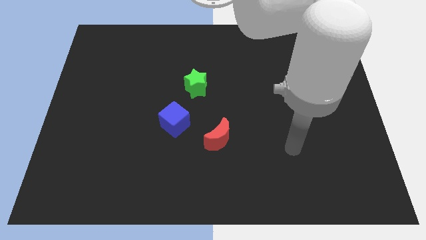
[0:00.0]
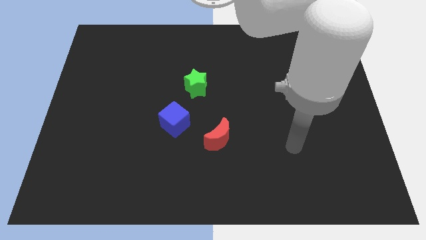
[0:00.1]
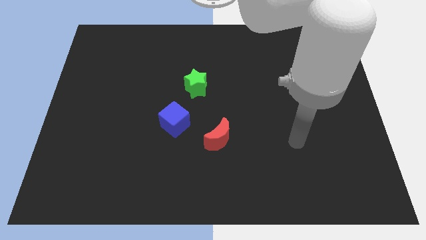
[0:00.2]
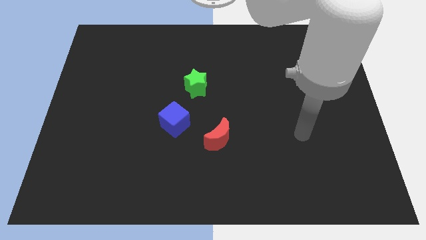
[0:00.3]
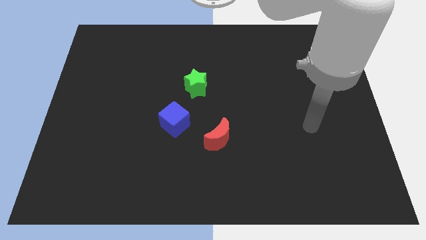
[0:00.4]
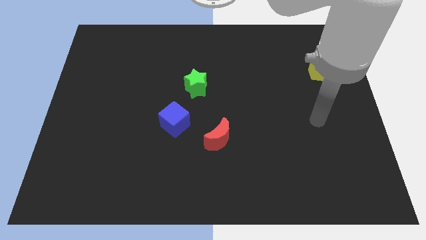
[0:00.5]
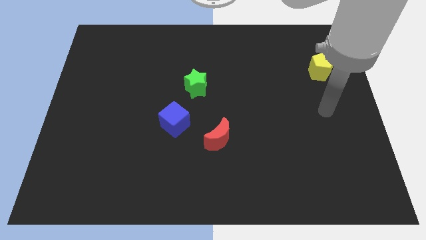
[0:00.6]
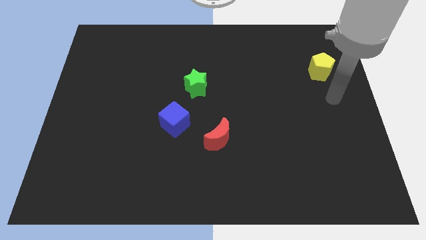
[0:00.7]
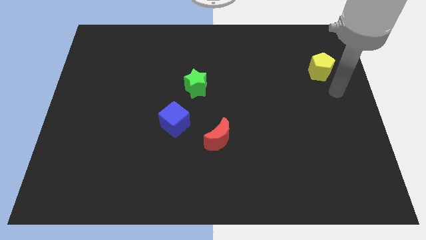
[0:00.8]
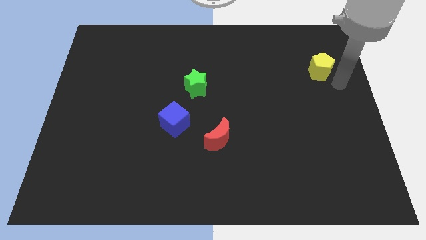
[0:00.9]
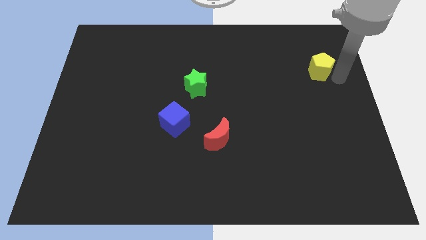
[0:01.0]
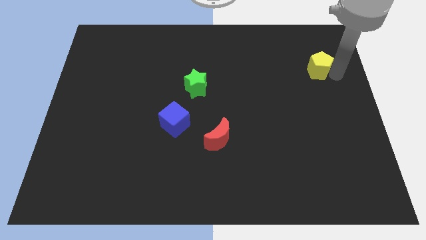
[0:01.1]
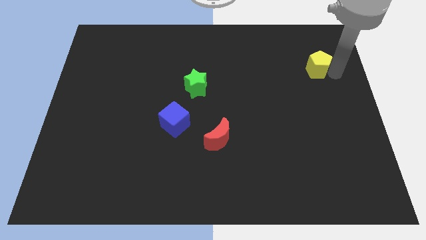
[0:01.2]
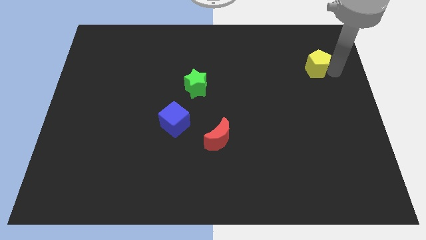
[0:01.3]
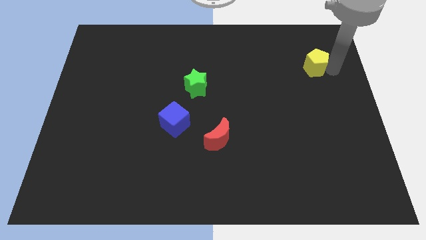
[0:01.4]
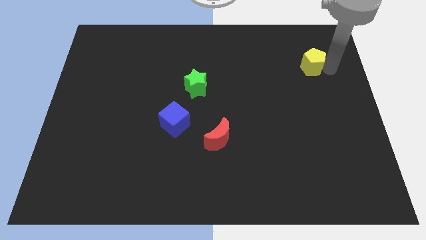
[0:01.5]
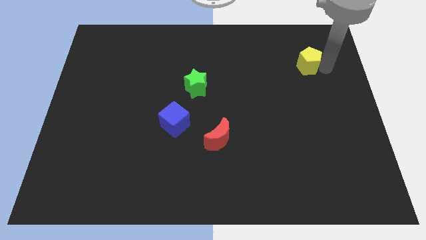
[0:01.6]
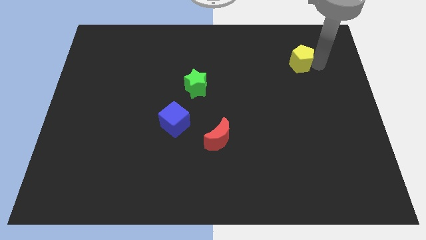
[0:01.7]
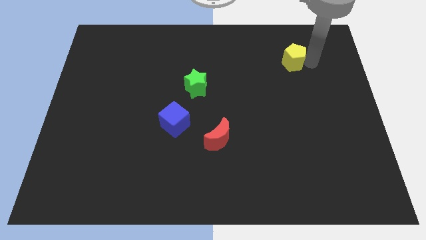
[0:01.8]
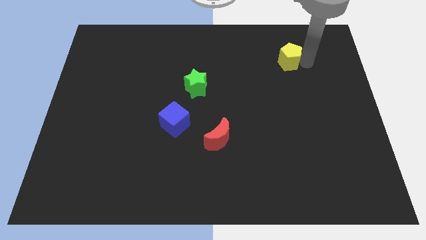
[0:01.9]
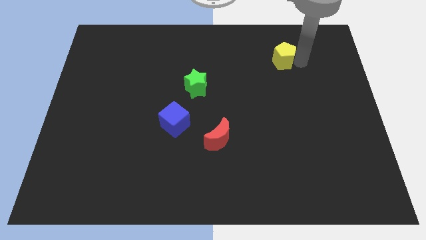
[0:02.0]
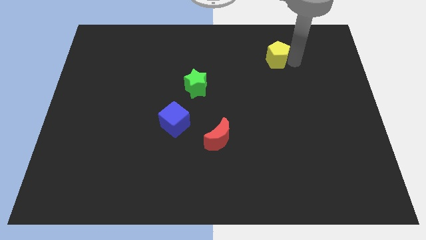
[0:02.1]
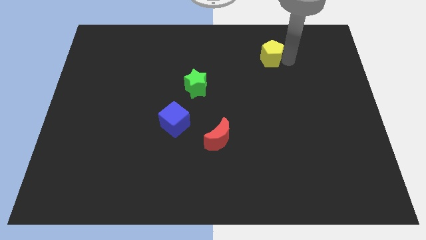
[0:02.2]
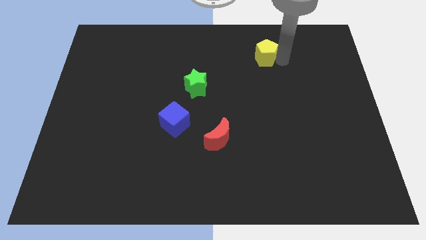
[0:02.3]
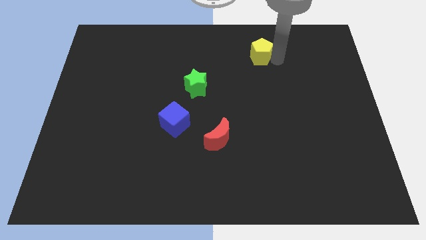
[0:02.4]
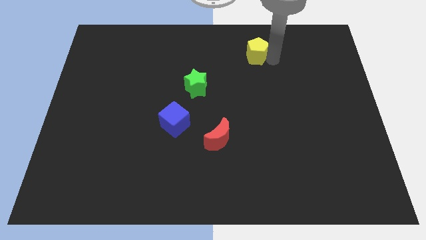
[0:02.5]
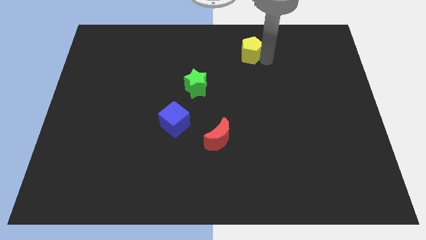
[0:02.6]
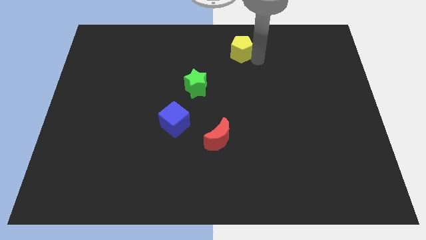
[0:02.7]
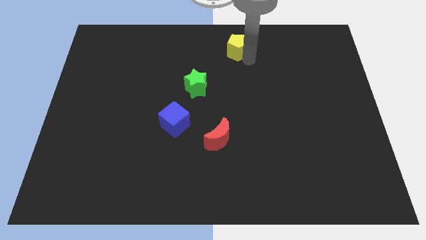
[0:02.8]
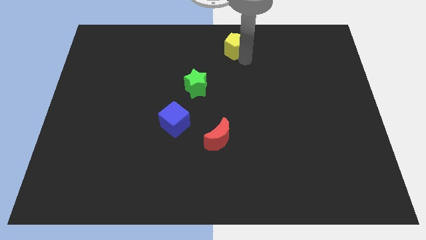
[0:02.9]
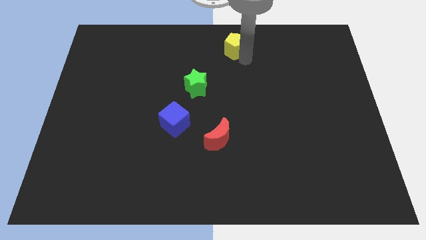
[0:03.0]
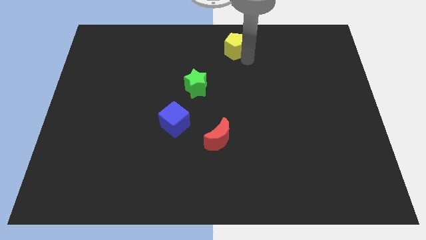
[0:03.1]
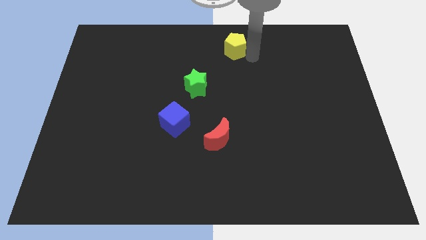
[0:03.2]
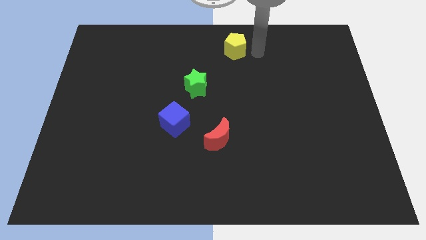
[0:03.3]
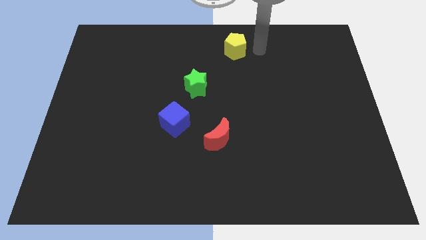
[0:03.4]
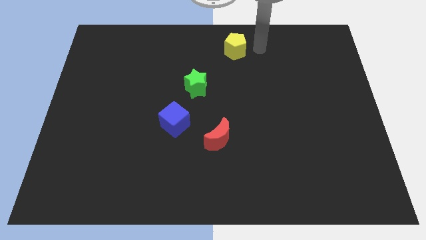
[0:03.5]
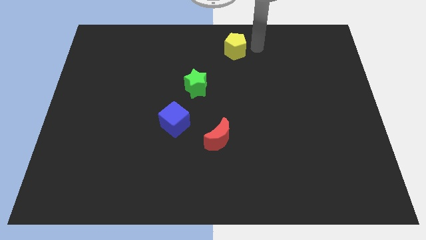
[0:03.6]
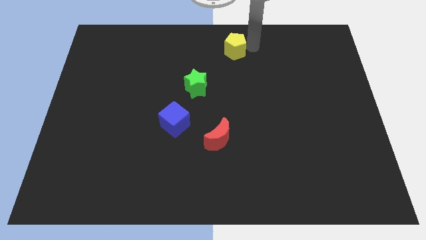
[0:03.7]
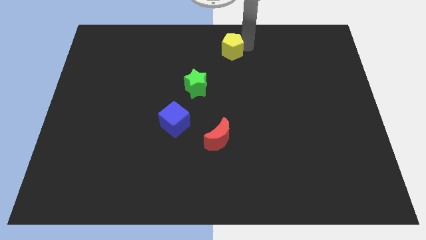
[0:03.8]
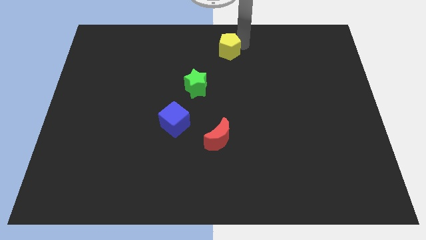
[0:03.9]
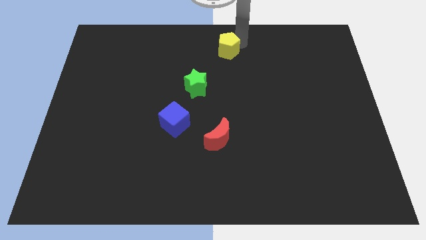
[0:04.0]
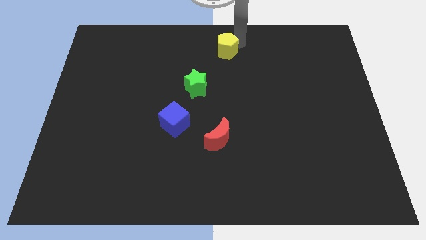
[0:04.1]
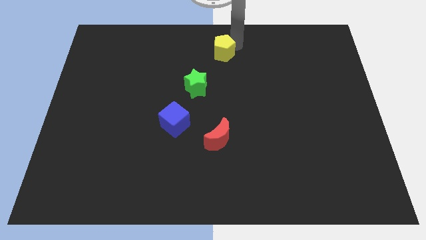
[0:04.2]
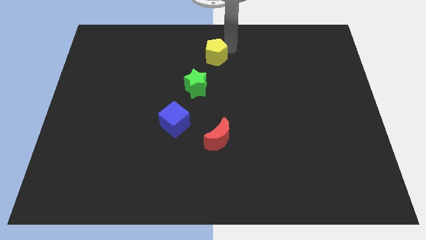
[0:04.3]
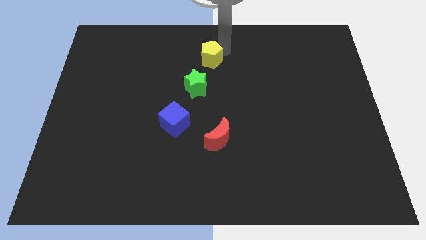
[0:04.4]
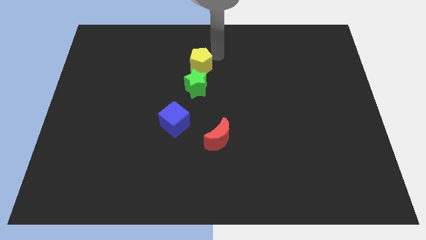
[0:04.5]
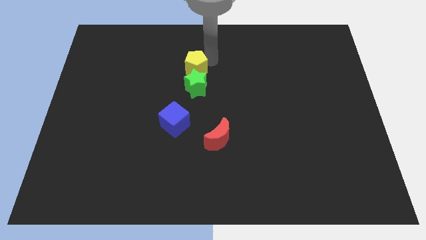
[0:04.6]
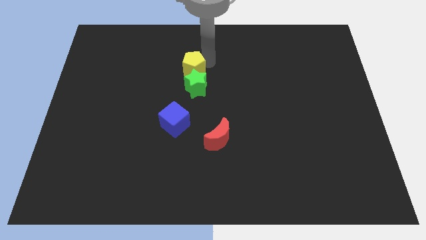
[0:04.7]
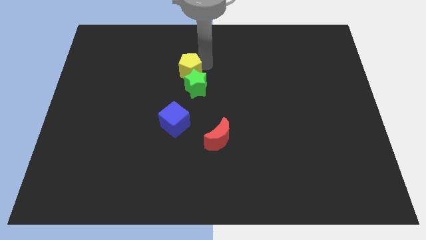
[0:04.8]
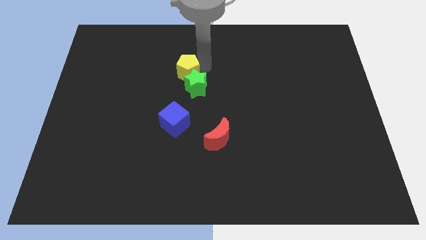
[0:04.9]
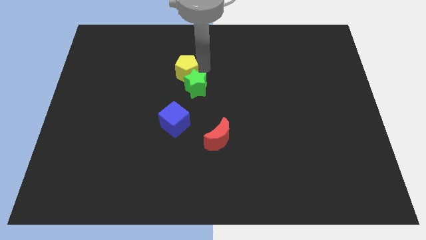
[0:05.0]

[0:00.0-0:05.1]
move the yellow block next to the green block

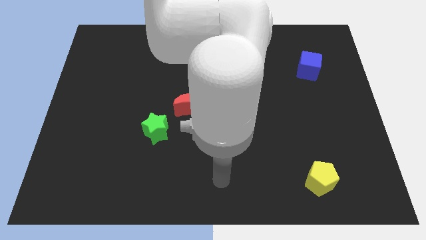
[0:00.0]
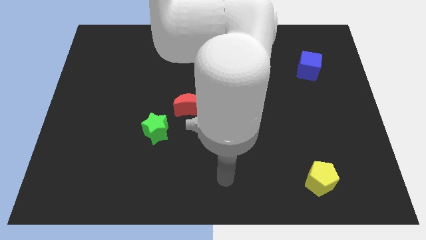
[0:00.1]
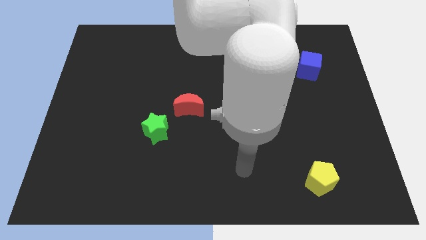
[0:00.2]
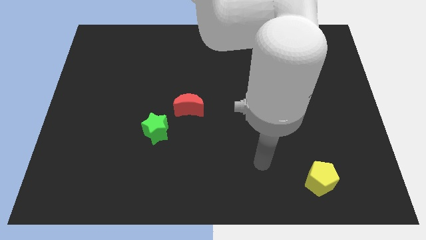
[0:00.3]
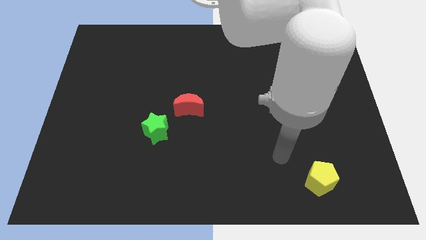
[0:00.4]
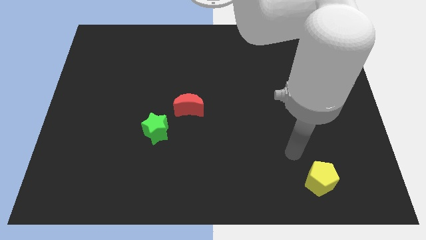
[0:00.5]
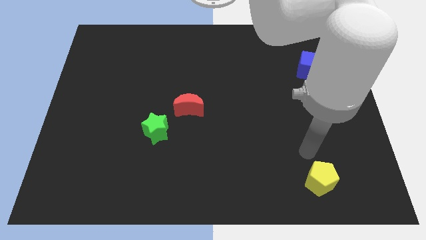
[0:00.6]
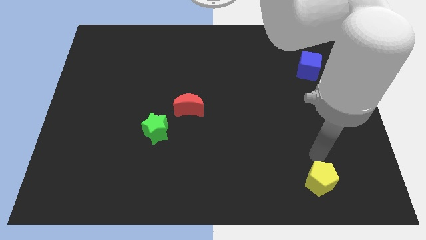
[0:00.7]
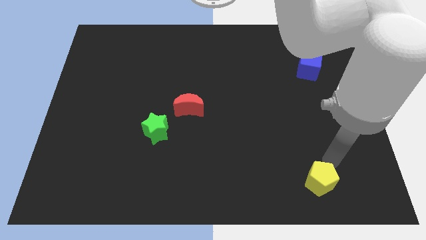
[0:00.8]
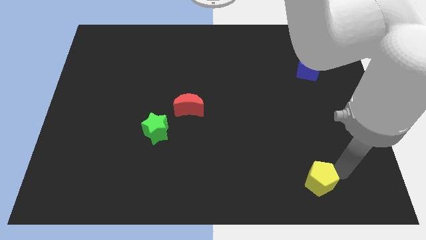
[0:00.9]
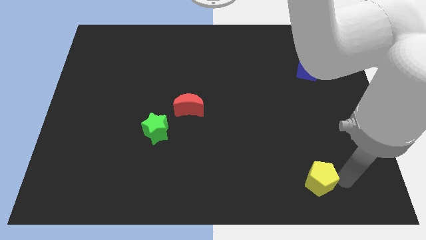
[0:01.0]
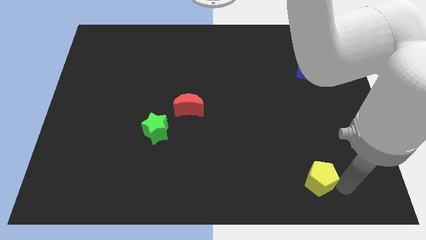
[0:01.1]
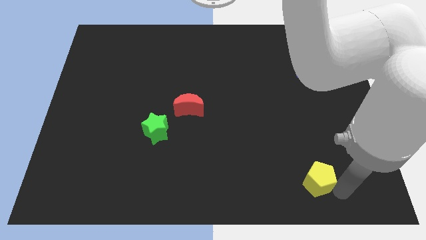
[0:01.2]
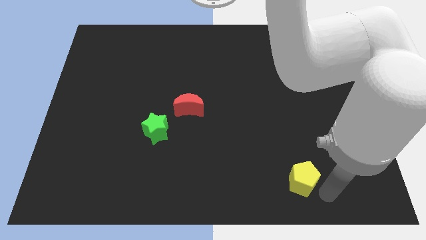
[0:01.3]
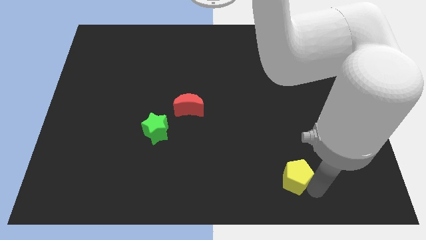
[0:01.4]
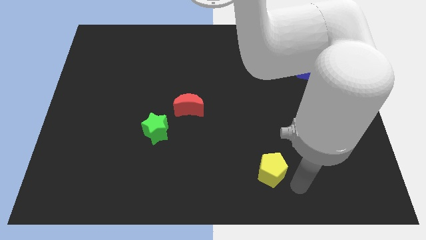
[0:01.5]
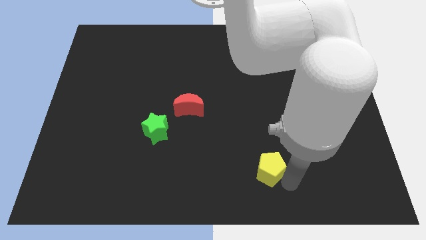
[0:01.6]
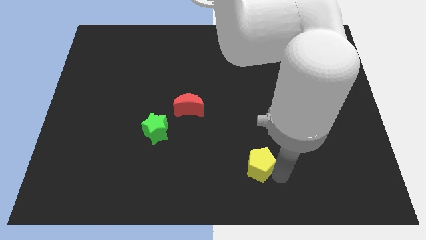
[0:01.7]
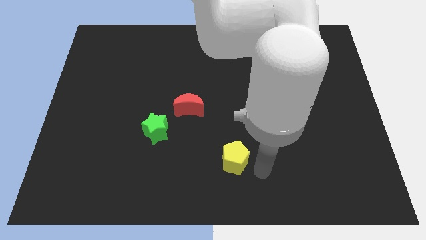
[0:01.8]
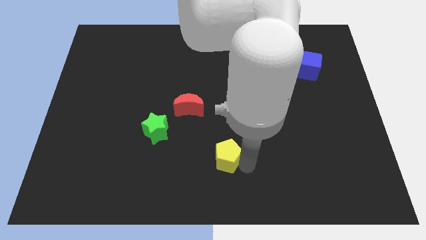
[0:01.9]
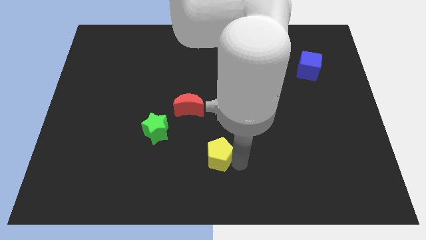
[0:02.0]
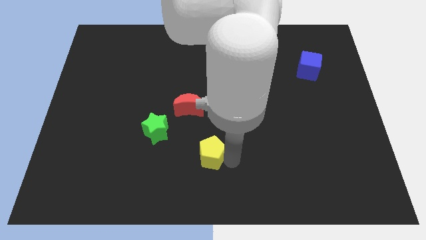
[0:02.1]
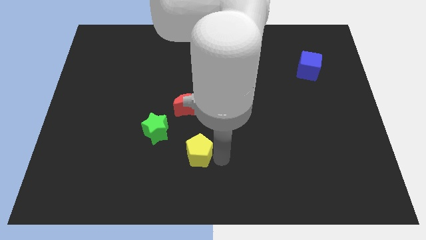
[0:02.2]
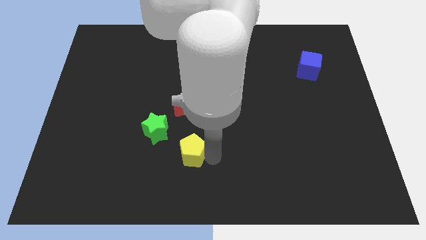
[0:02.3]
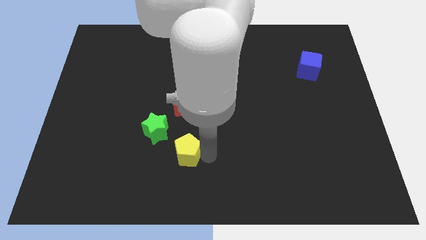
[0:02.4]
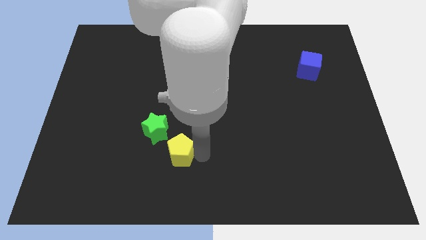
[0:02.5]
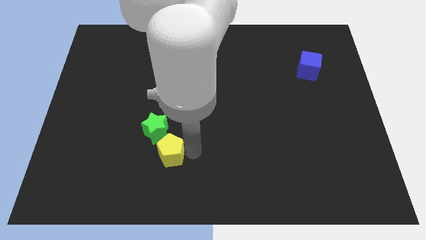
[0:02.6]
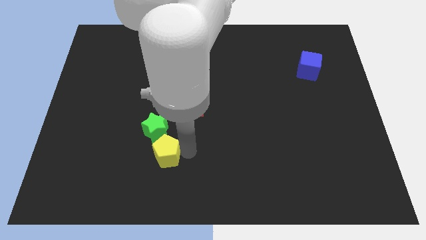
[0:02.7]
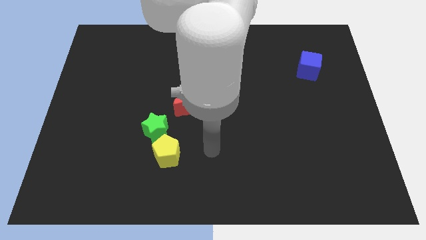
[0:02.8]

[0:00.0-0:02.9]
slide the yellow block to the green star

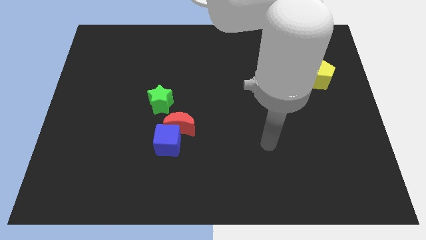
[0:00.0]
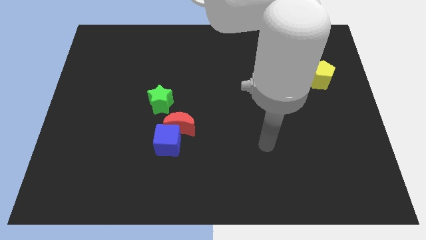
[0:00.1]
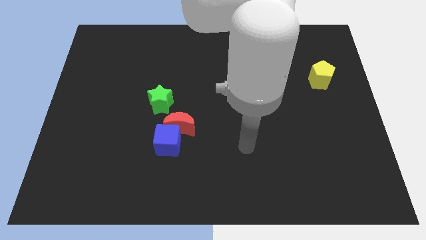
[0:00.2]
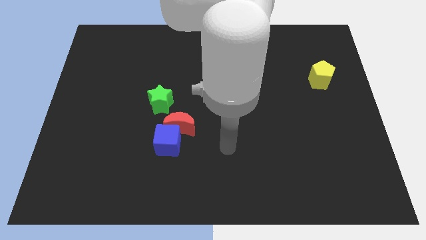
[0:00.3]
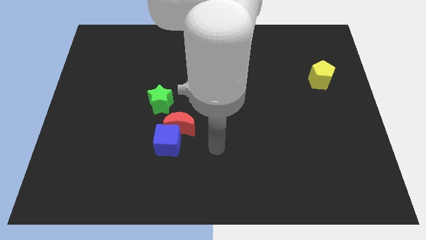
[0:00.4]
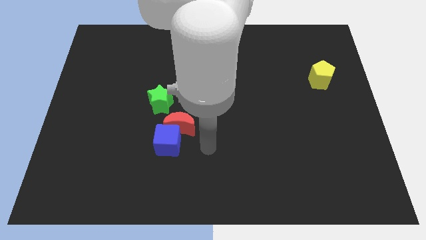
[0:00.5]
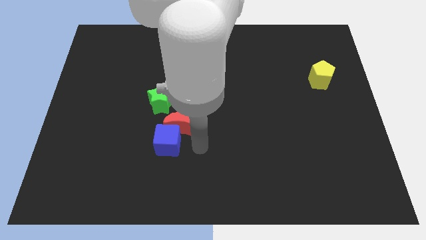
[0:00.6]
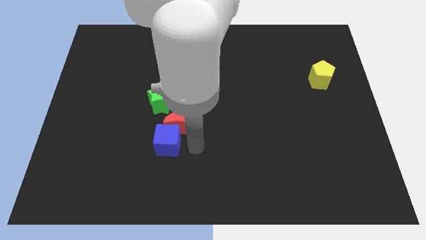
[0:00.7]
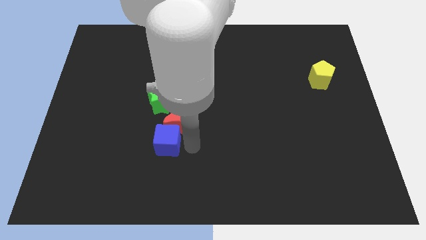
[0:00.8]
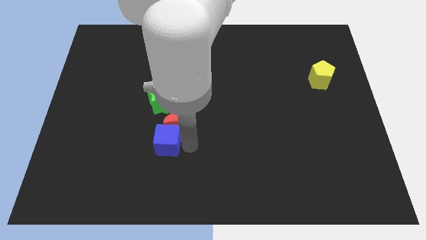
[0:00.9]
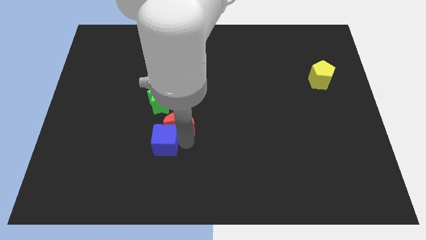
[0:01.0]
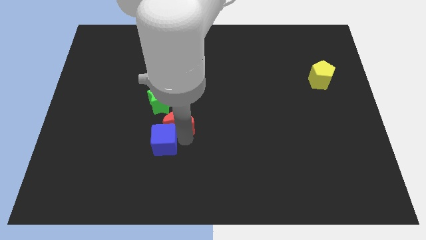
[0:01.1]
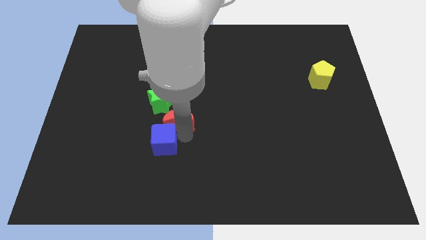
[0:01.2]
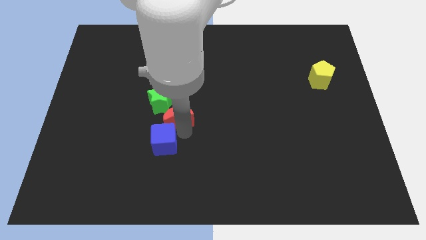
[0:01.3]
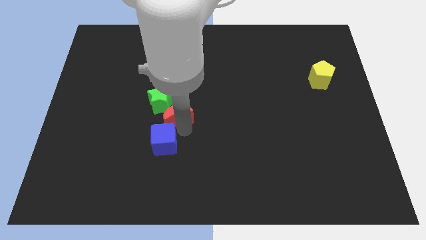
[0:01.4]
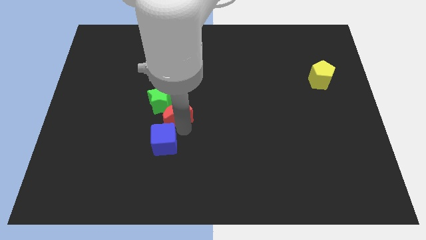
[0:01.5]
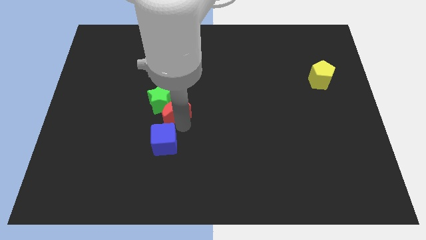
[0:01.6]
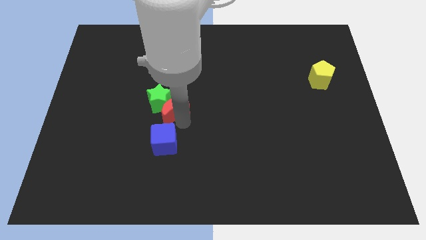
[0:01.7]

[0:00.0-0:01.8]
put the red block to the star
